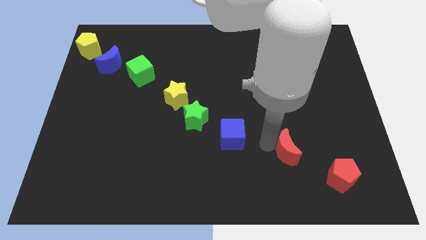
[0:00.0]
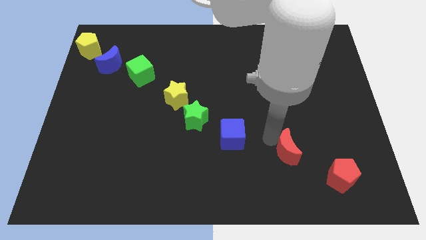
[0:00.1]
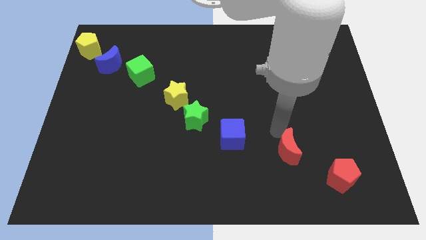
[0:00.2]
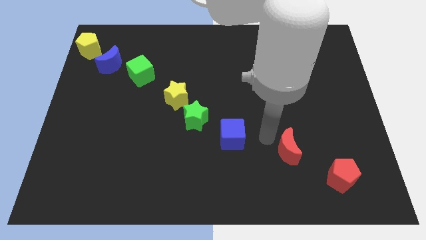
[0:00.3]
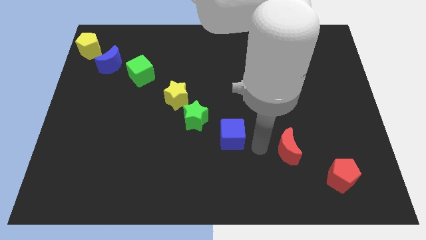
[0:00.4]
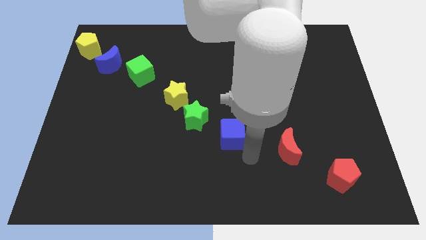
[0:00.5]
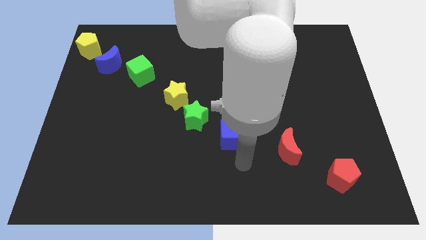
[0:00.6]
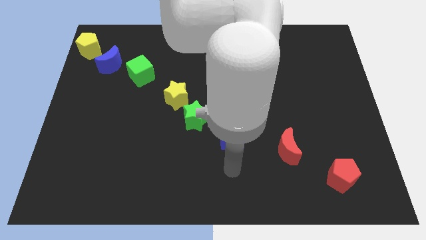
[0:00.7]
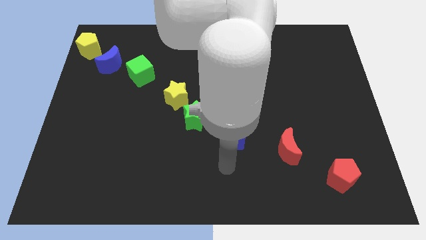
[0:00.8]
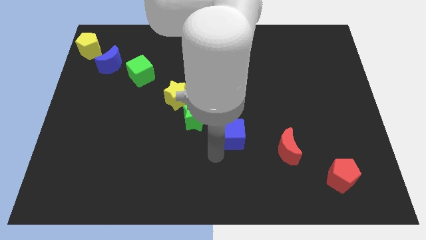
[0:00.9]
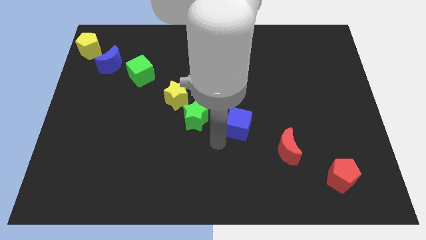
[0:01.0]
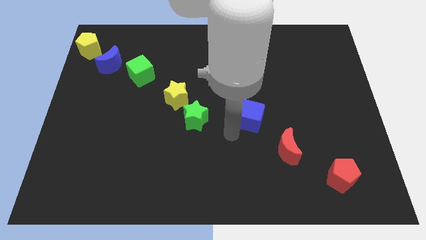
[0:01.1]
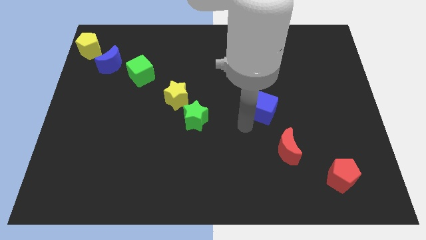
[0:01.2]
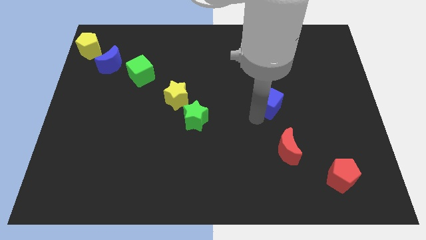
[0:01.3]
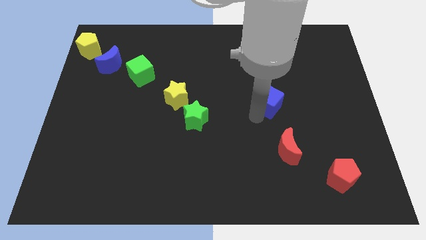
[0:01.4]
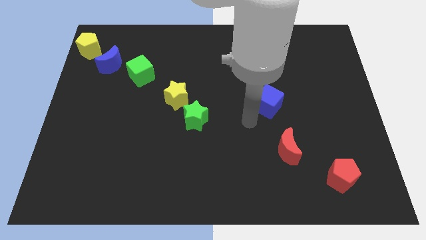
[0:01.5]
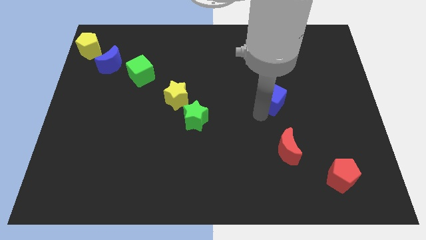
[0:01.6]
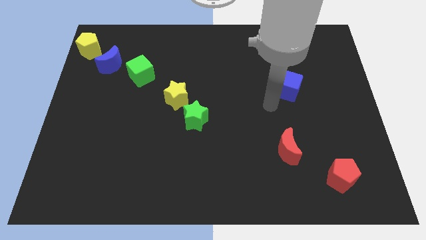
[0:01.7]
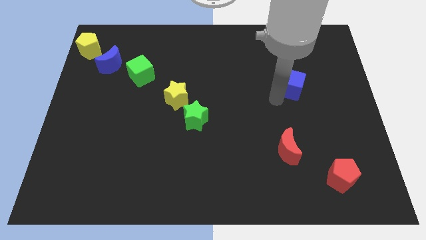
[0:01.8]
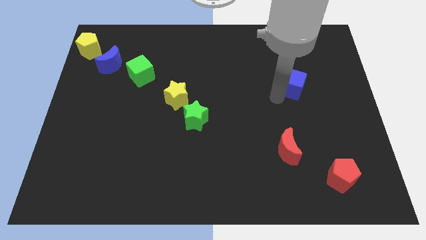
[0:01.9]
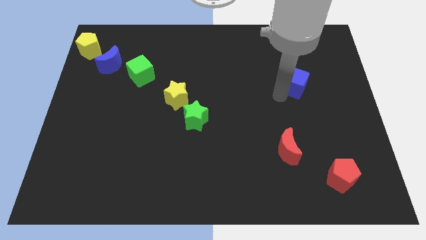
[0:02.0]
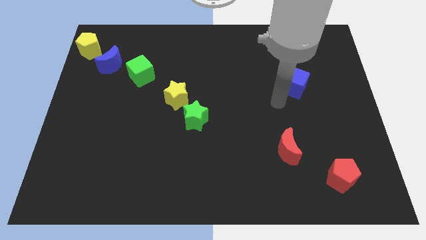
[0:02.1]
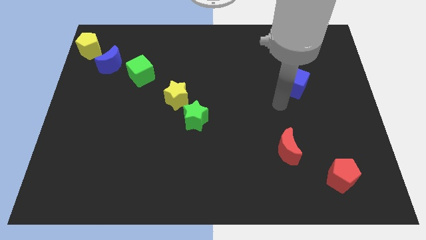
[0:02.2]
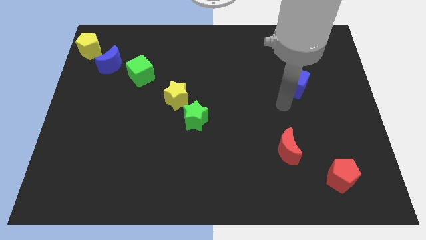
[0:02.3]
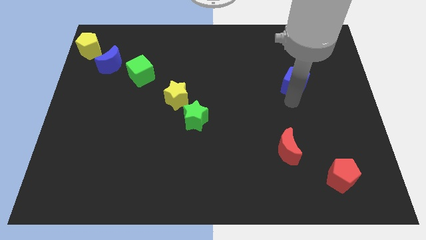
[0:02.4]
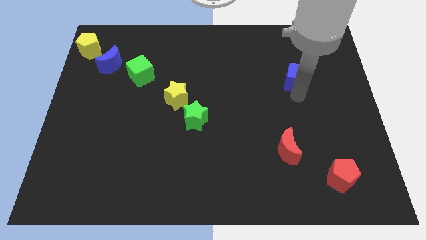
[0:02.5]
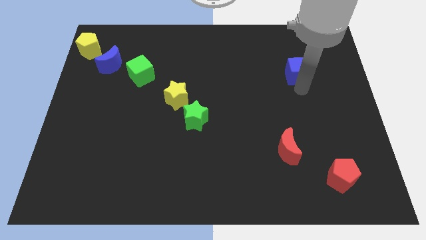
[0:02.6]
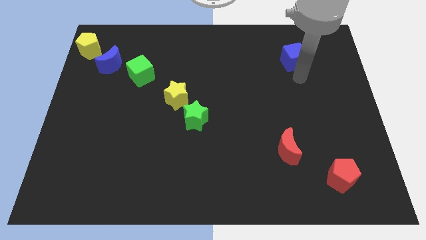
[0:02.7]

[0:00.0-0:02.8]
remove the blue cube in between the green star and red crescent

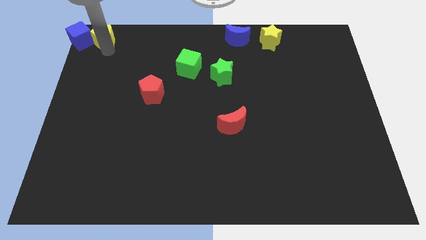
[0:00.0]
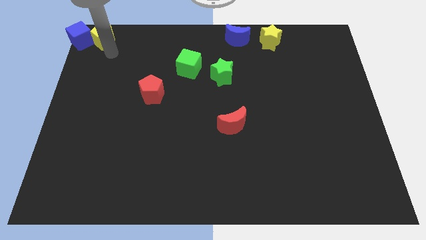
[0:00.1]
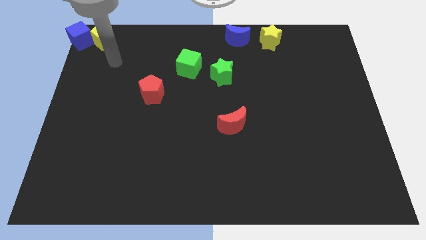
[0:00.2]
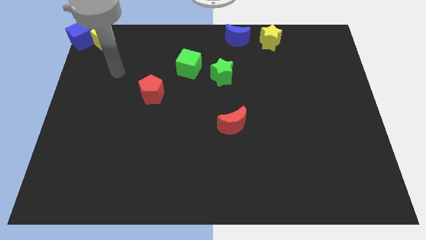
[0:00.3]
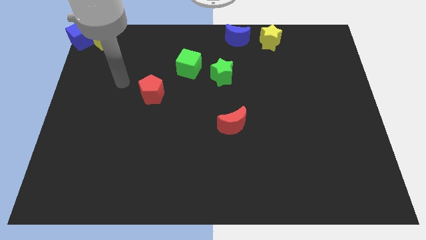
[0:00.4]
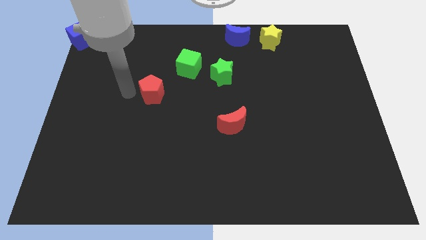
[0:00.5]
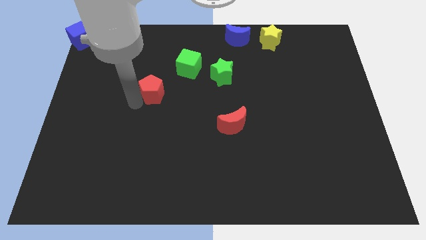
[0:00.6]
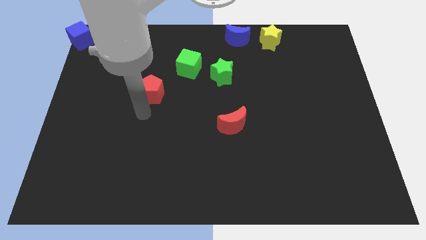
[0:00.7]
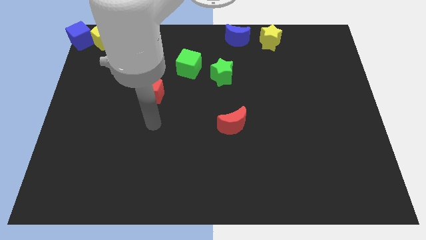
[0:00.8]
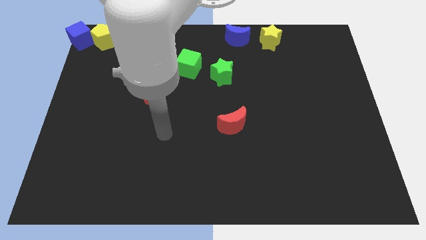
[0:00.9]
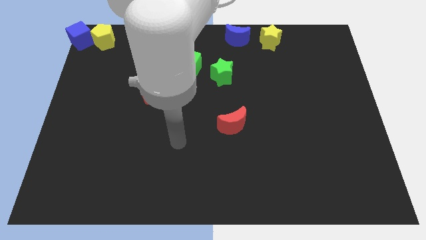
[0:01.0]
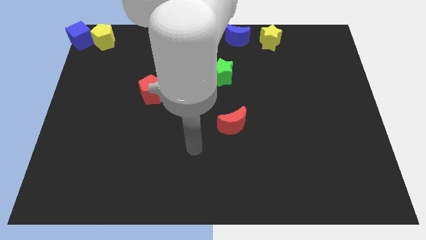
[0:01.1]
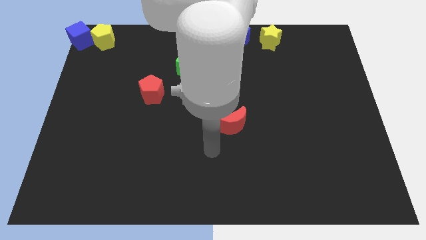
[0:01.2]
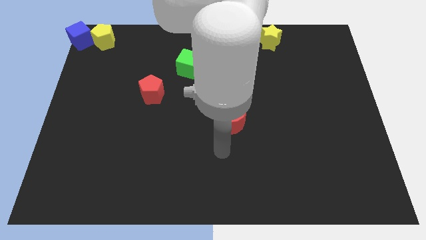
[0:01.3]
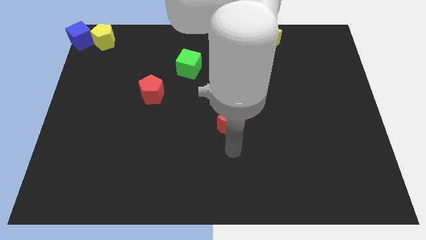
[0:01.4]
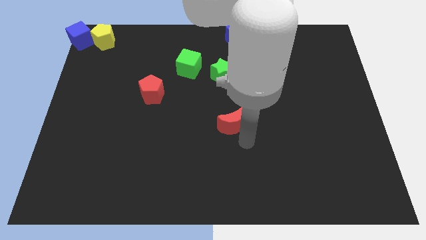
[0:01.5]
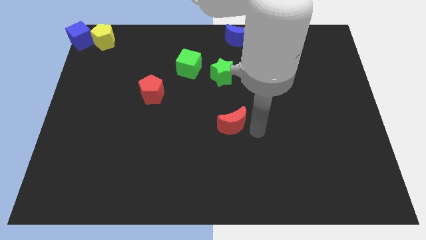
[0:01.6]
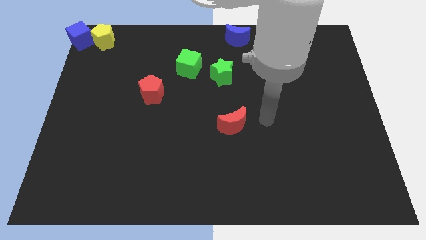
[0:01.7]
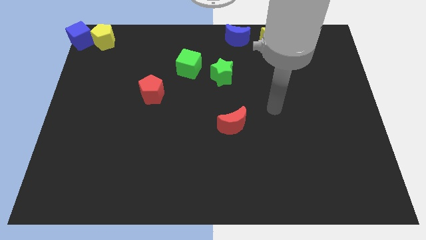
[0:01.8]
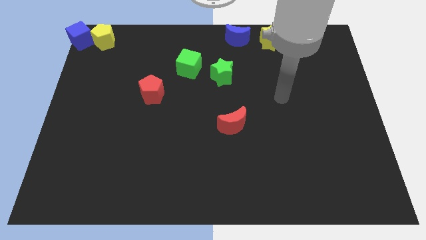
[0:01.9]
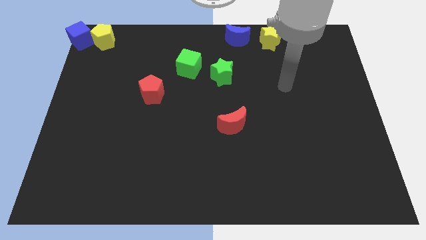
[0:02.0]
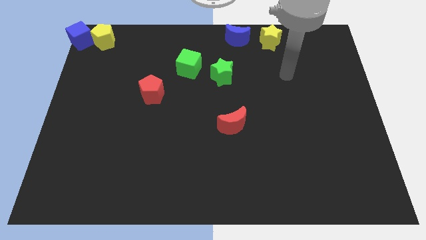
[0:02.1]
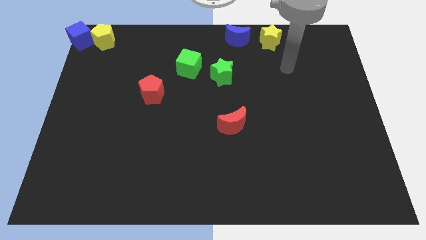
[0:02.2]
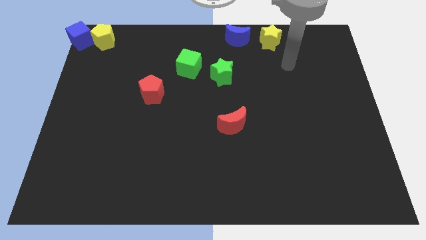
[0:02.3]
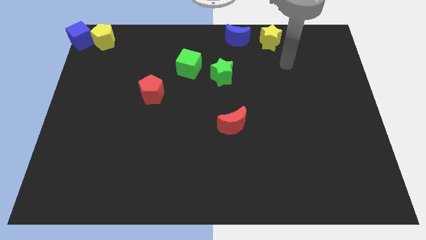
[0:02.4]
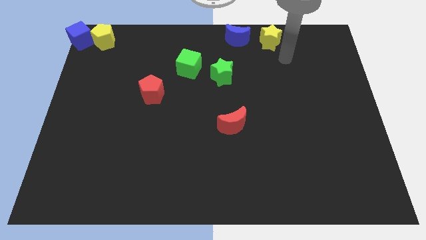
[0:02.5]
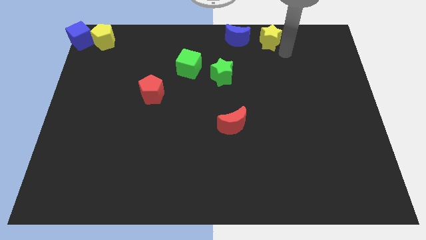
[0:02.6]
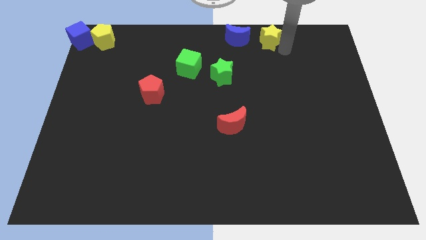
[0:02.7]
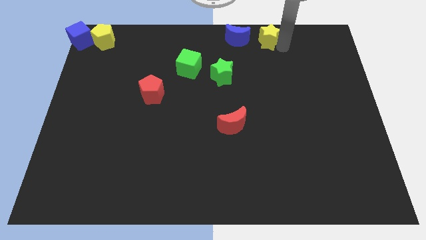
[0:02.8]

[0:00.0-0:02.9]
move away from the yellow pentagon

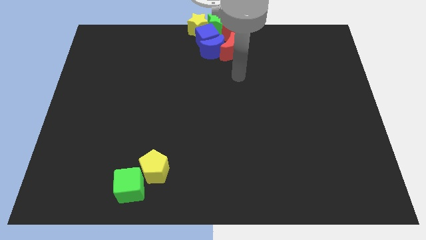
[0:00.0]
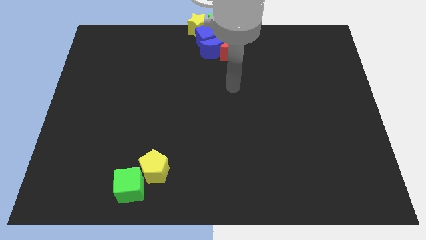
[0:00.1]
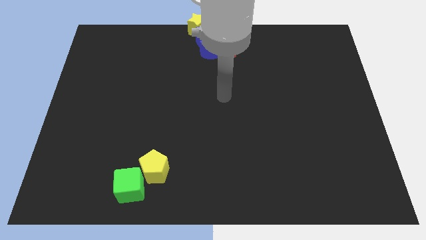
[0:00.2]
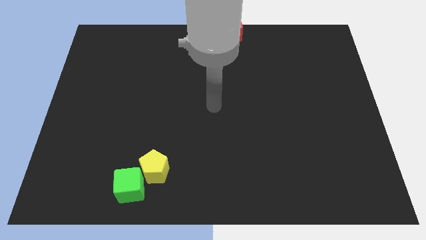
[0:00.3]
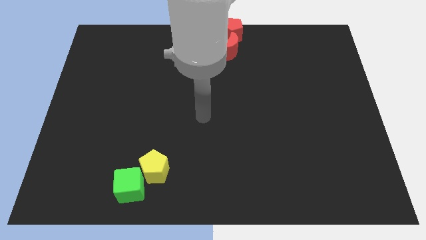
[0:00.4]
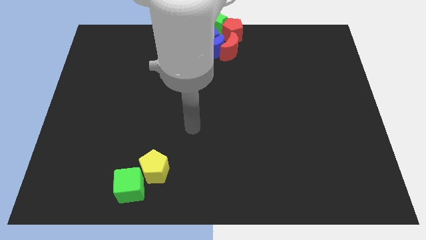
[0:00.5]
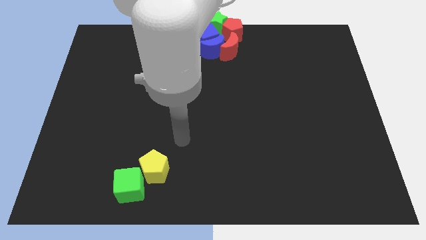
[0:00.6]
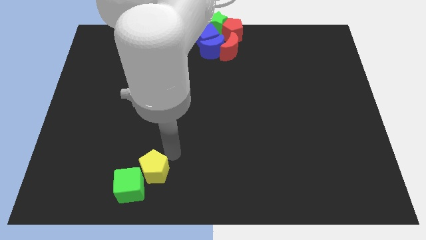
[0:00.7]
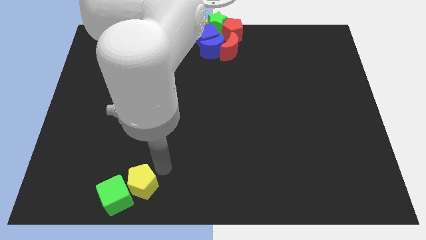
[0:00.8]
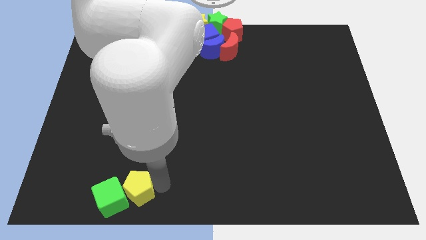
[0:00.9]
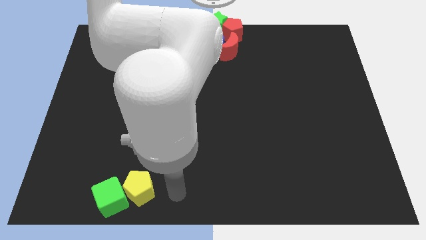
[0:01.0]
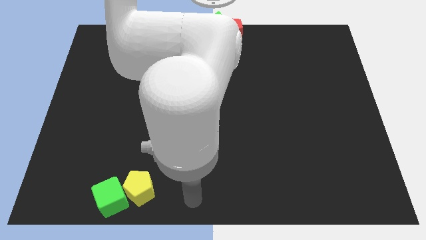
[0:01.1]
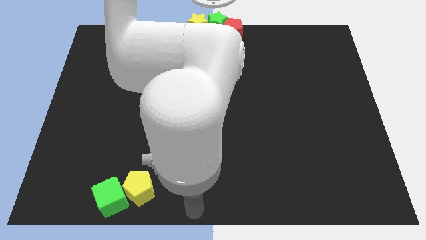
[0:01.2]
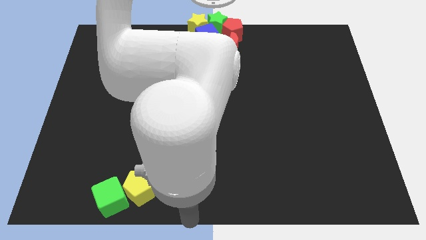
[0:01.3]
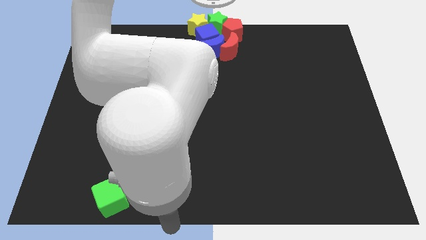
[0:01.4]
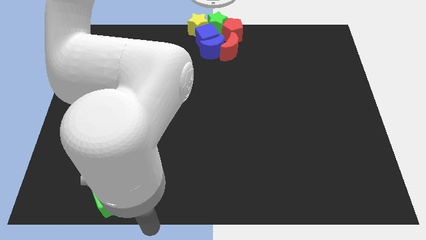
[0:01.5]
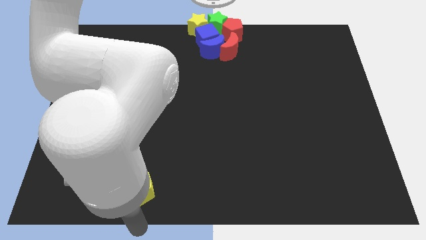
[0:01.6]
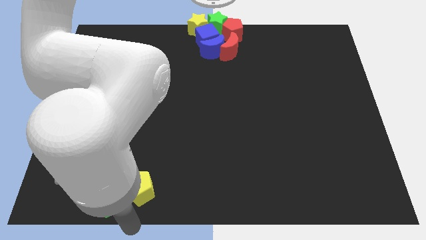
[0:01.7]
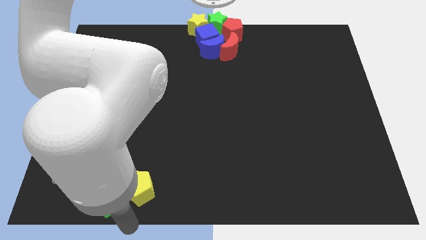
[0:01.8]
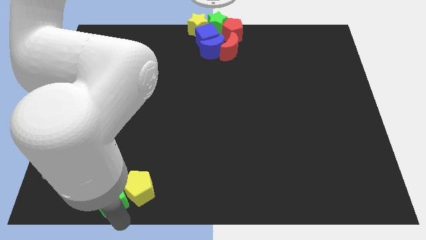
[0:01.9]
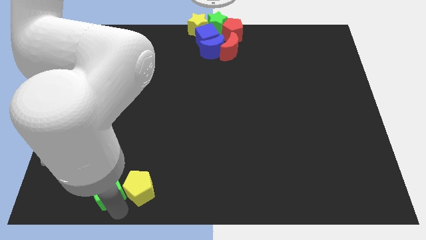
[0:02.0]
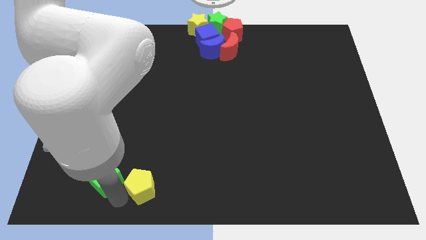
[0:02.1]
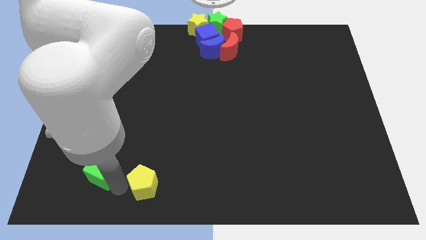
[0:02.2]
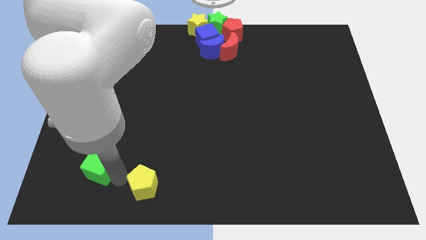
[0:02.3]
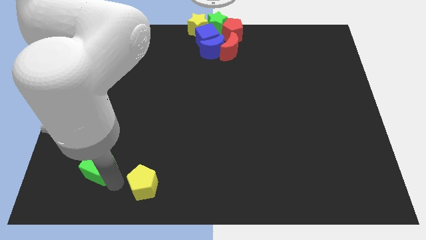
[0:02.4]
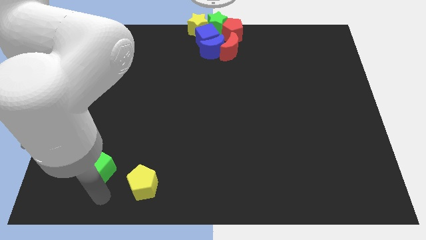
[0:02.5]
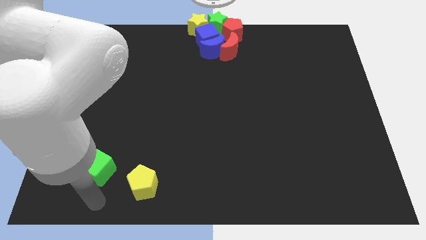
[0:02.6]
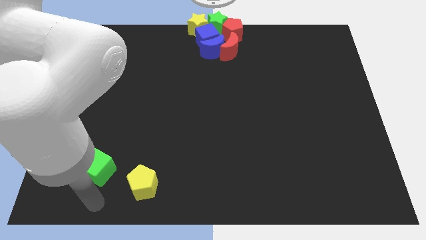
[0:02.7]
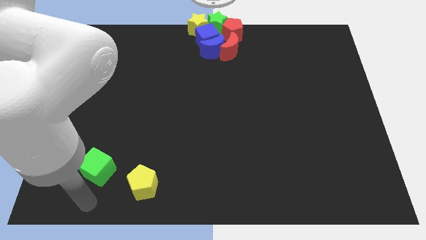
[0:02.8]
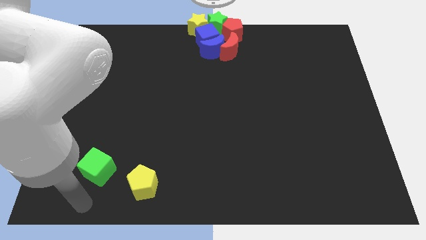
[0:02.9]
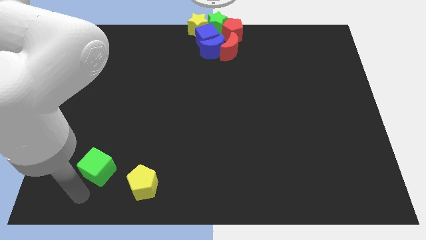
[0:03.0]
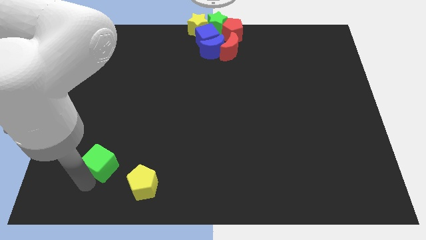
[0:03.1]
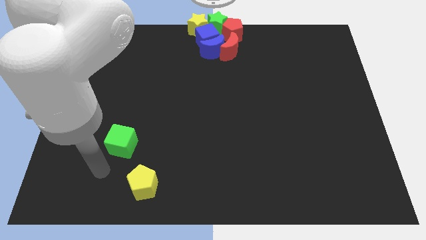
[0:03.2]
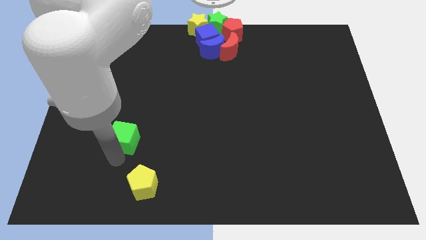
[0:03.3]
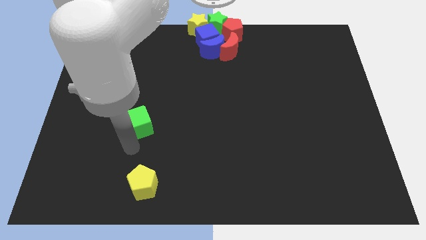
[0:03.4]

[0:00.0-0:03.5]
separate the green cube from the yellow pentagon
